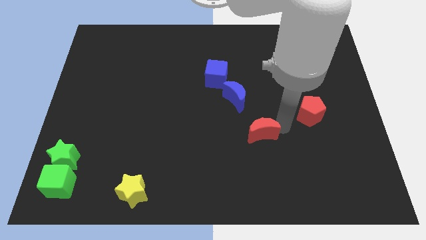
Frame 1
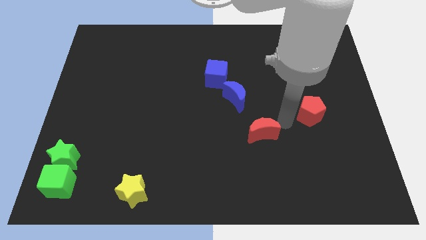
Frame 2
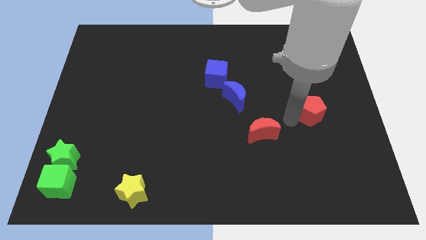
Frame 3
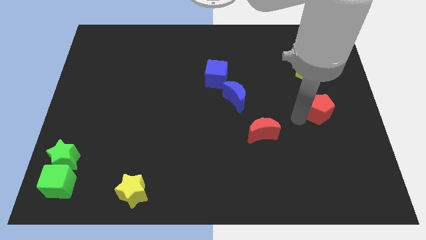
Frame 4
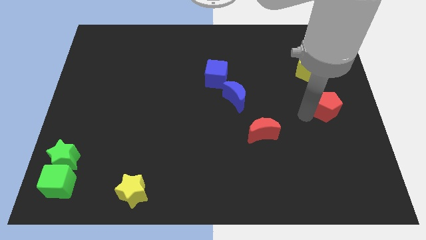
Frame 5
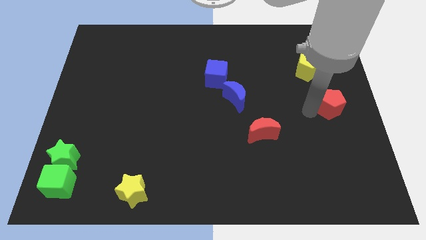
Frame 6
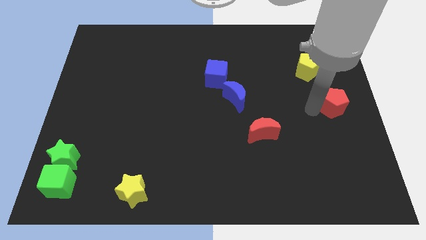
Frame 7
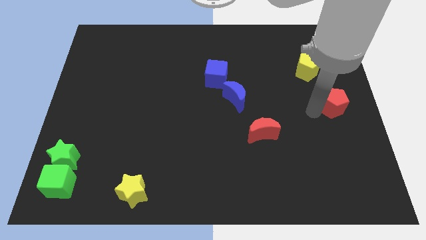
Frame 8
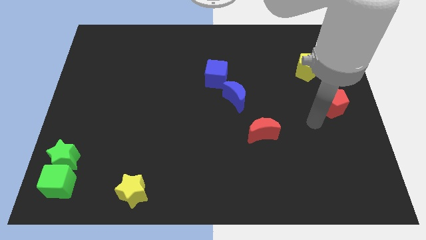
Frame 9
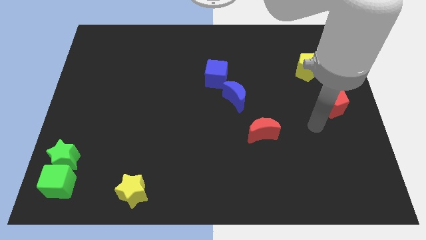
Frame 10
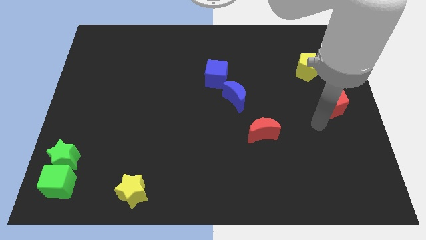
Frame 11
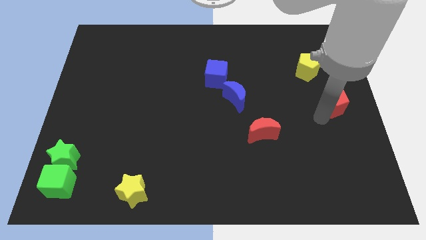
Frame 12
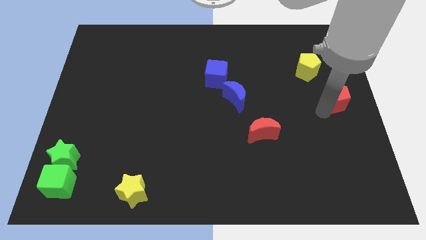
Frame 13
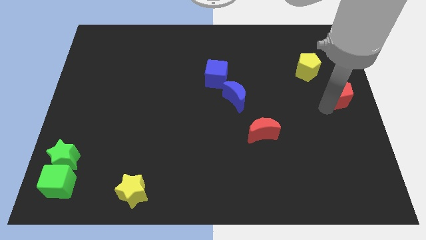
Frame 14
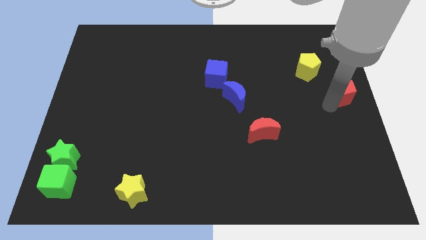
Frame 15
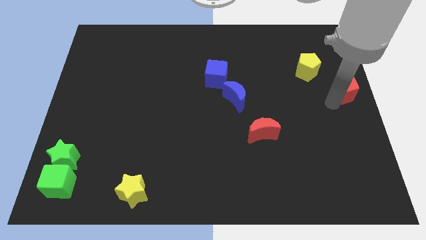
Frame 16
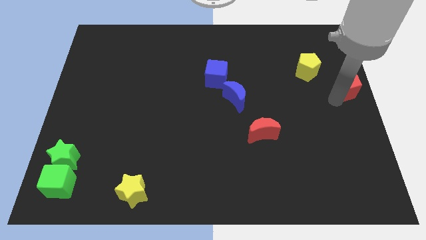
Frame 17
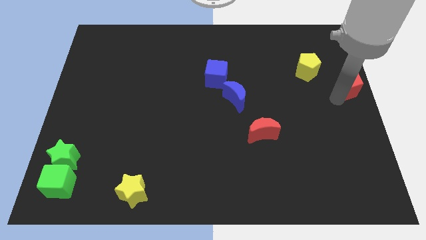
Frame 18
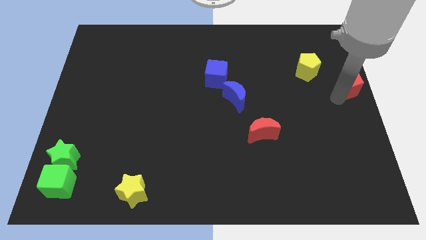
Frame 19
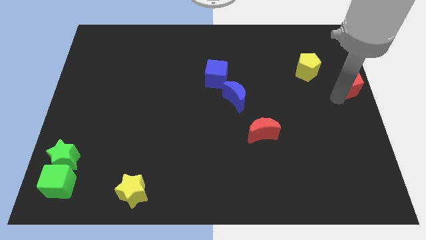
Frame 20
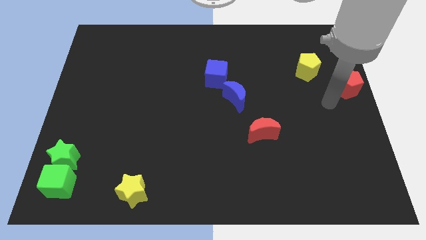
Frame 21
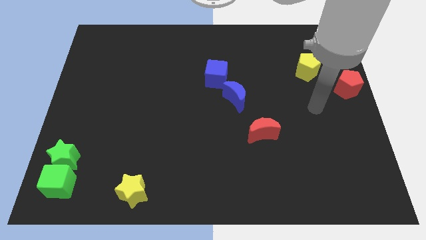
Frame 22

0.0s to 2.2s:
move the red pentagon parallel to the blue crescent

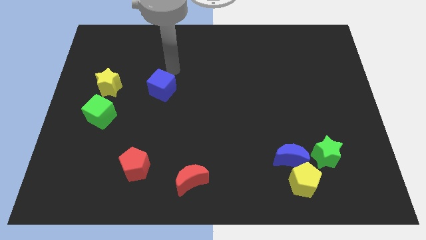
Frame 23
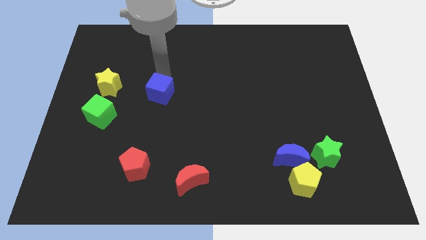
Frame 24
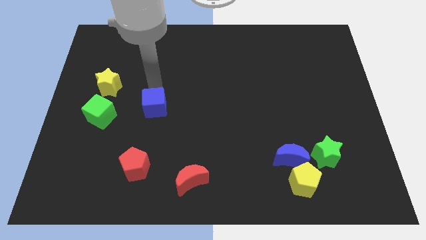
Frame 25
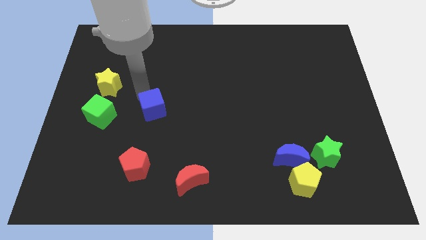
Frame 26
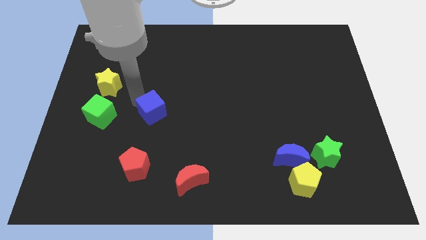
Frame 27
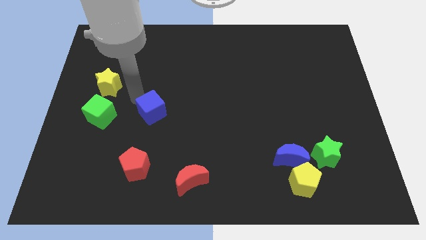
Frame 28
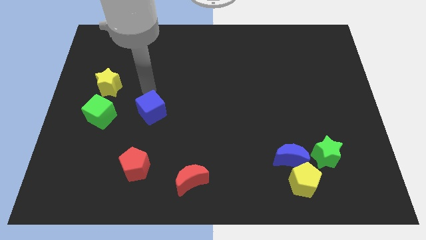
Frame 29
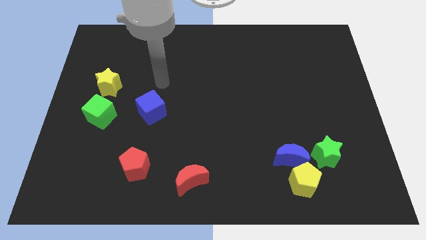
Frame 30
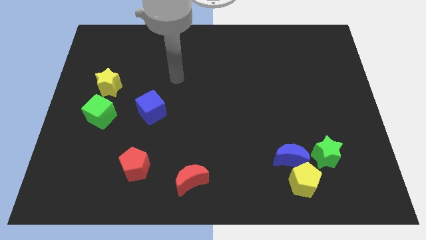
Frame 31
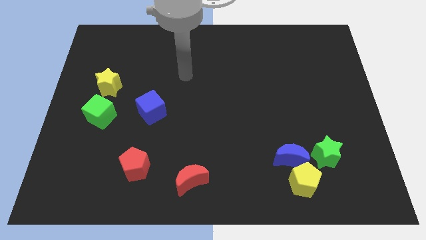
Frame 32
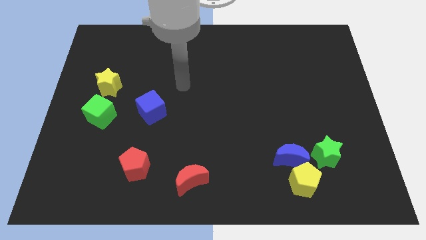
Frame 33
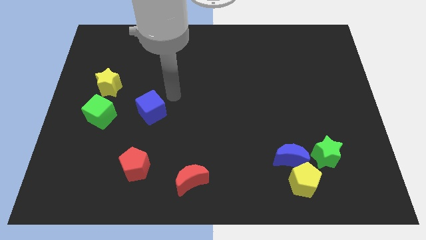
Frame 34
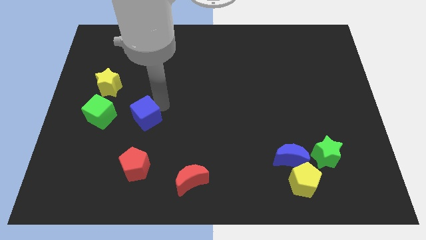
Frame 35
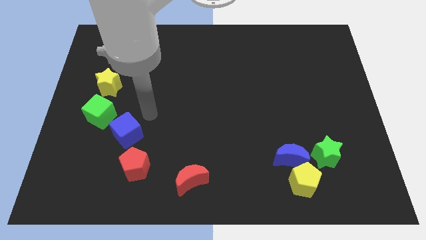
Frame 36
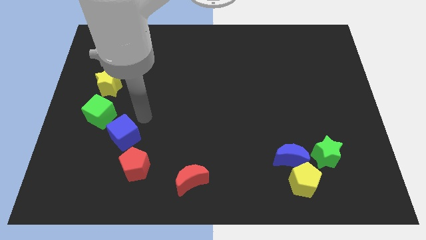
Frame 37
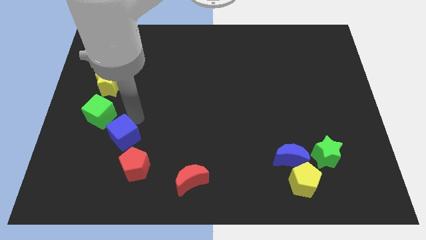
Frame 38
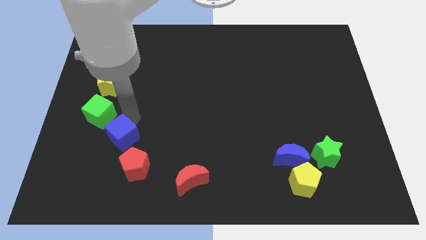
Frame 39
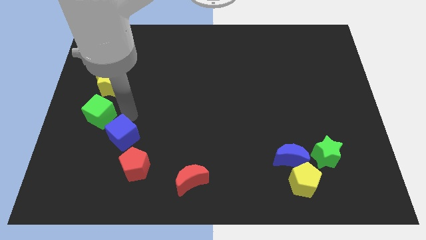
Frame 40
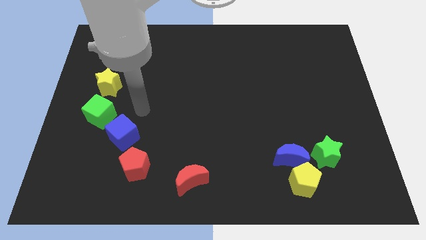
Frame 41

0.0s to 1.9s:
push the blue cube bottom of the green cube

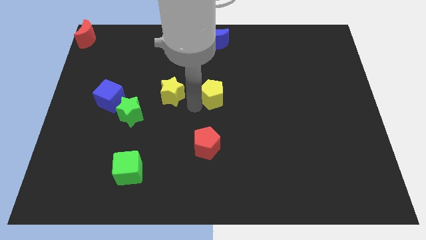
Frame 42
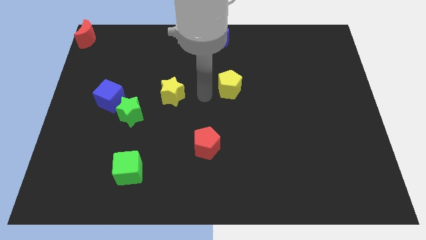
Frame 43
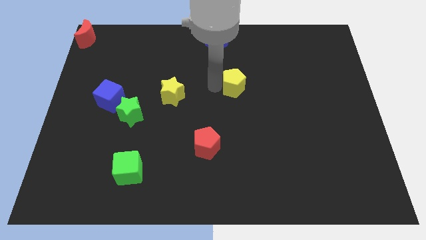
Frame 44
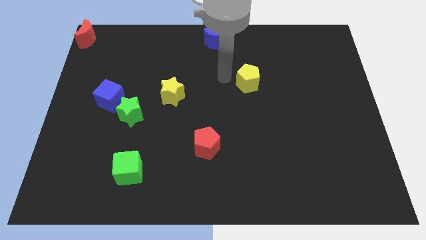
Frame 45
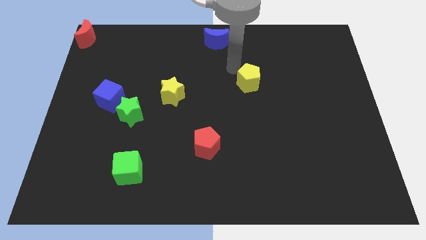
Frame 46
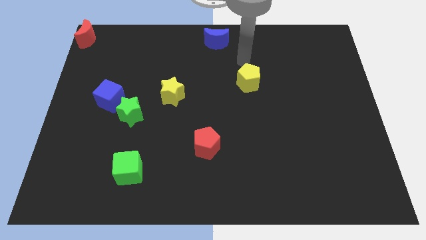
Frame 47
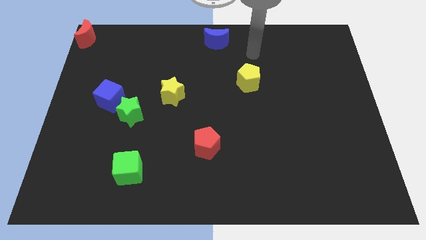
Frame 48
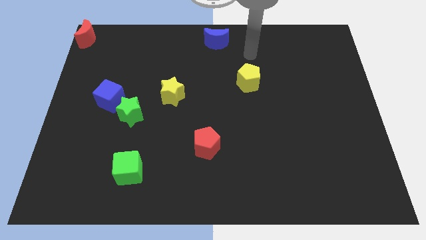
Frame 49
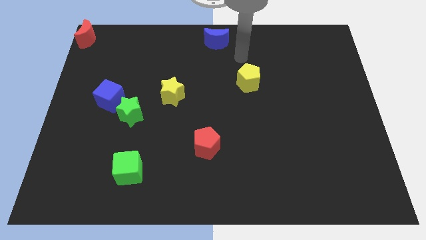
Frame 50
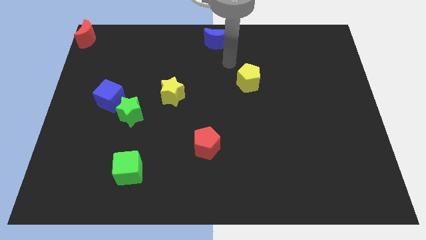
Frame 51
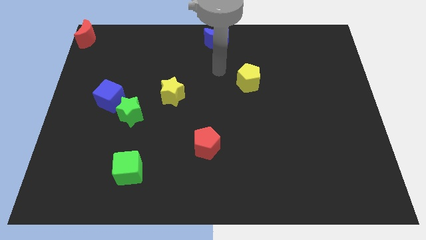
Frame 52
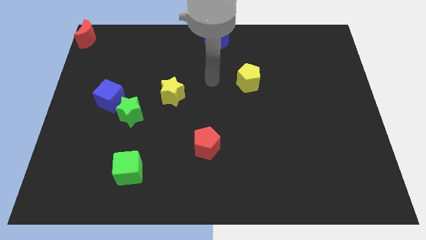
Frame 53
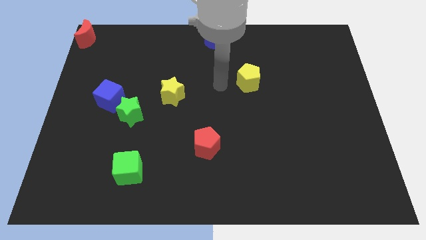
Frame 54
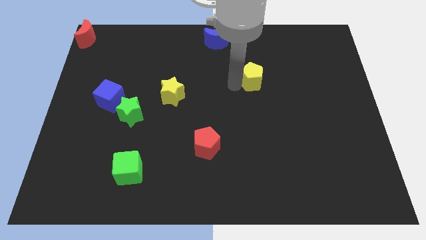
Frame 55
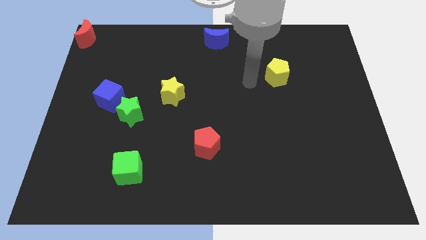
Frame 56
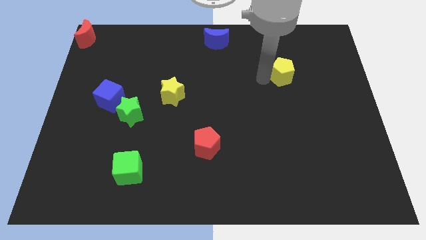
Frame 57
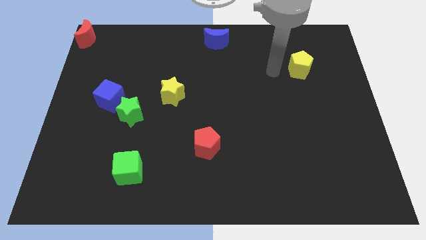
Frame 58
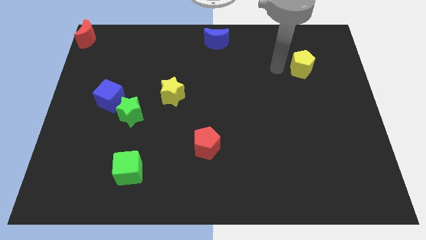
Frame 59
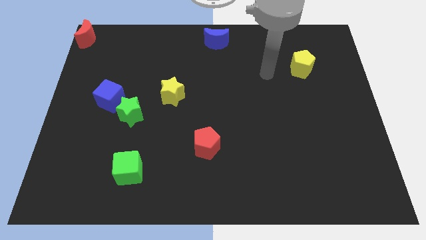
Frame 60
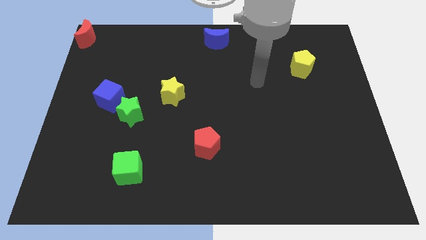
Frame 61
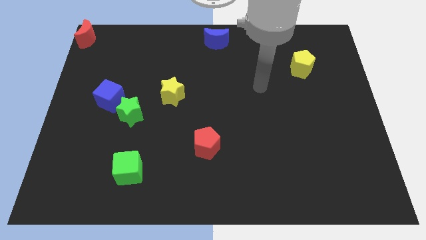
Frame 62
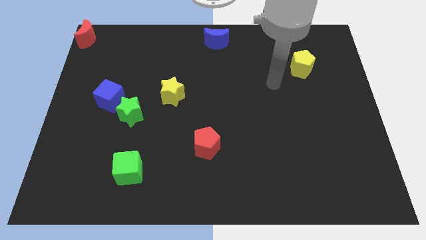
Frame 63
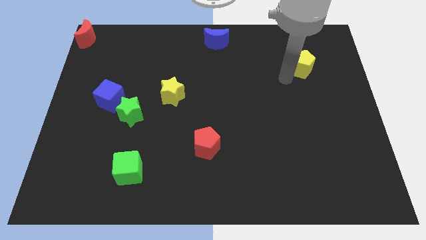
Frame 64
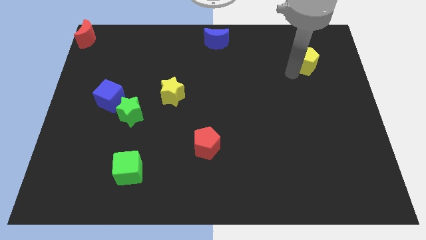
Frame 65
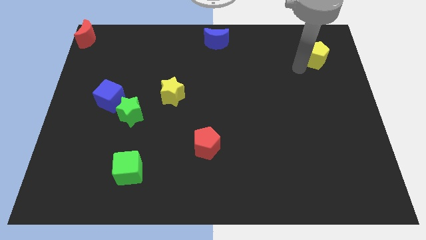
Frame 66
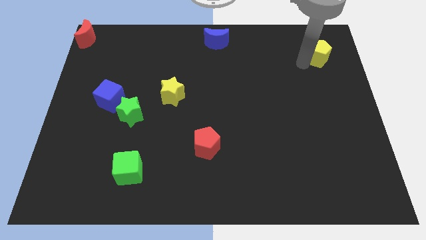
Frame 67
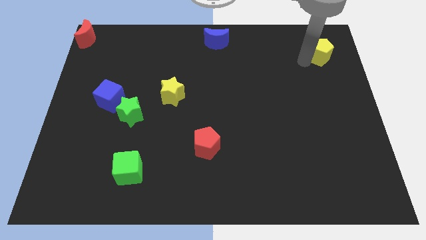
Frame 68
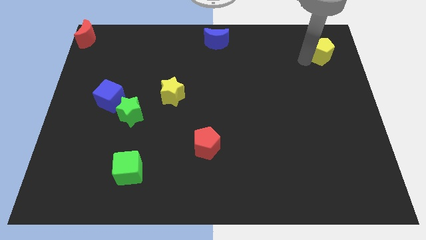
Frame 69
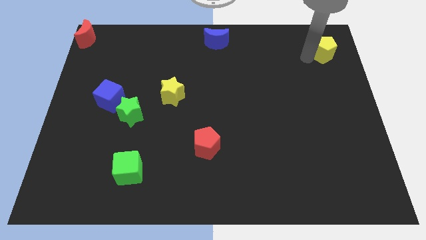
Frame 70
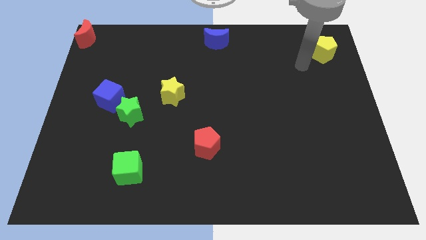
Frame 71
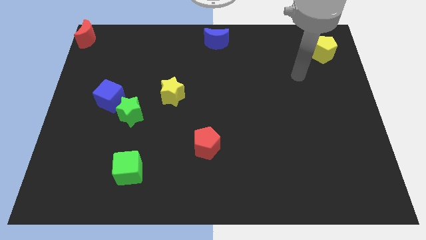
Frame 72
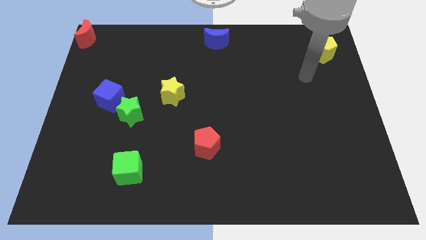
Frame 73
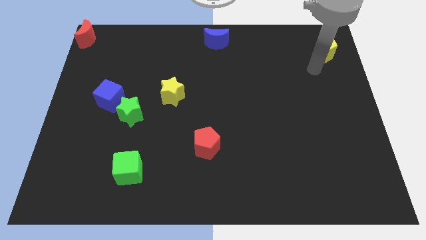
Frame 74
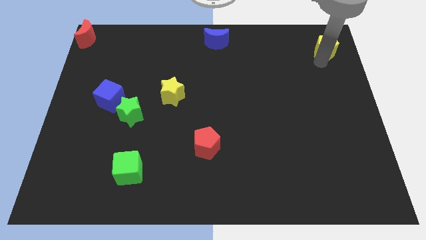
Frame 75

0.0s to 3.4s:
push the yellow pentagon towards the top right side of the board

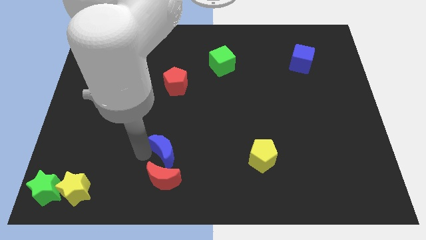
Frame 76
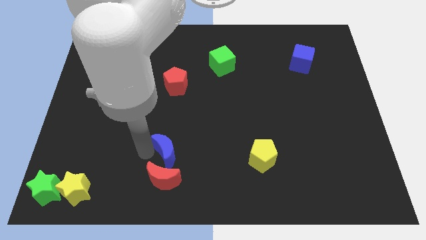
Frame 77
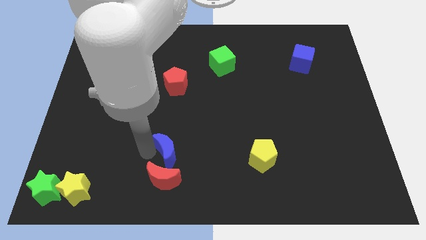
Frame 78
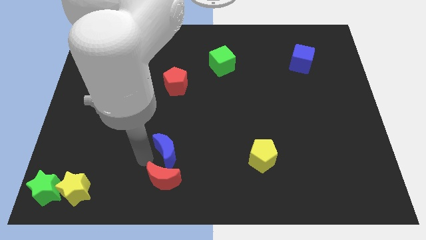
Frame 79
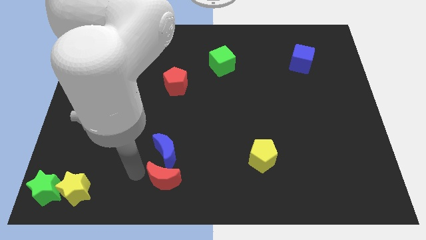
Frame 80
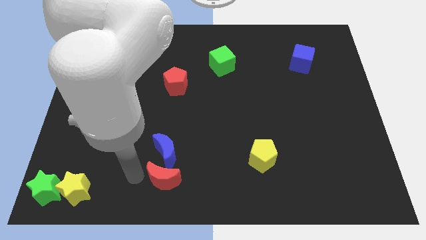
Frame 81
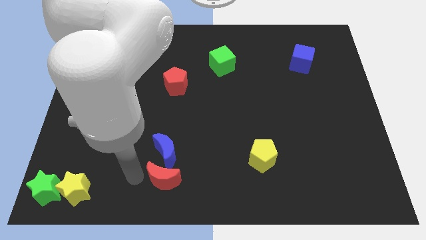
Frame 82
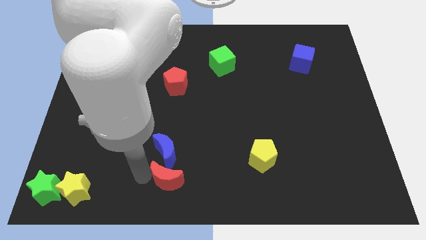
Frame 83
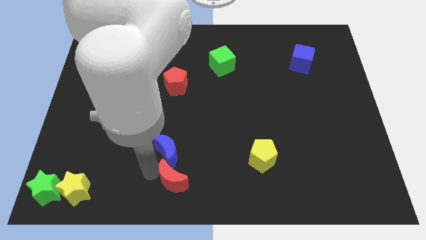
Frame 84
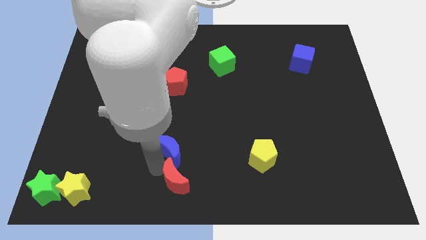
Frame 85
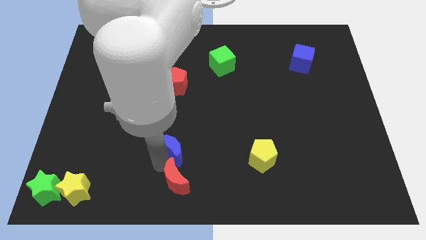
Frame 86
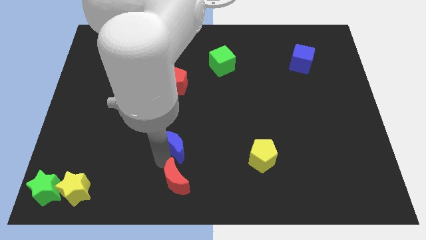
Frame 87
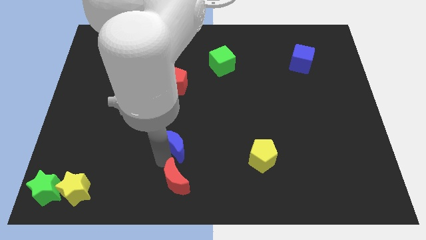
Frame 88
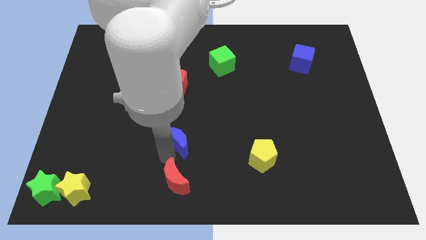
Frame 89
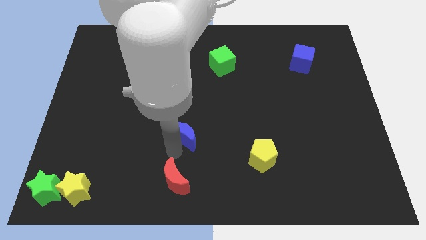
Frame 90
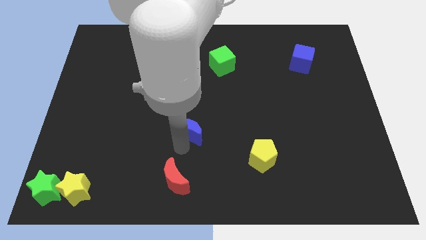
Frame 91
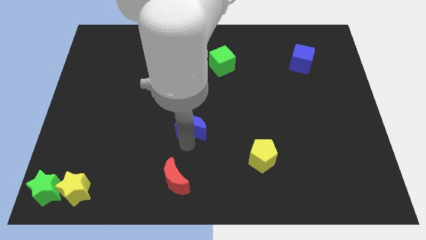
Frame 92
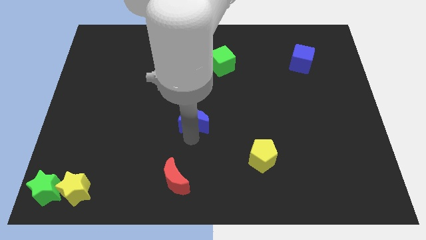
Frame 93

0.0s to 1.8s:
separate the blue moon from the red moon
